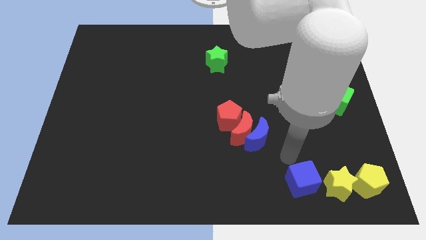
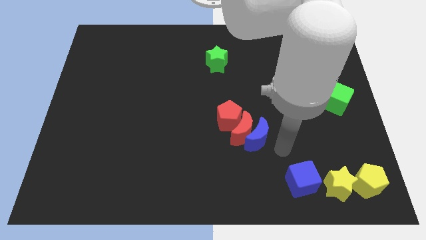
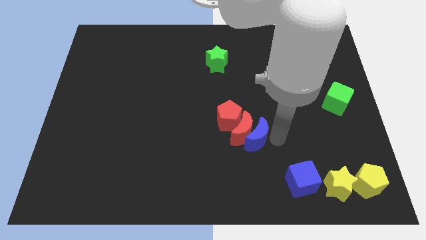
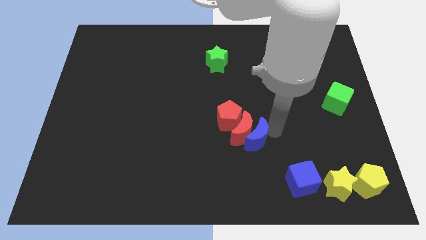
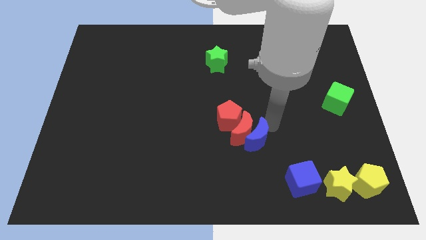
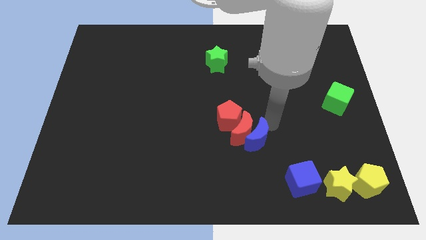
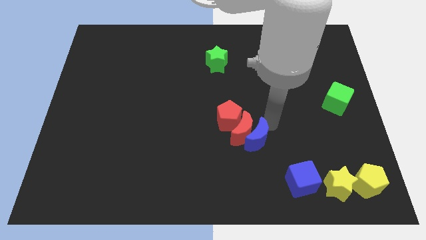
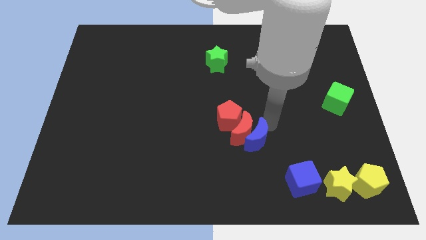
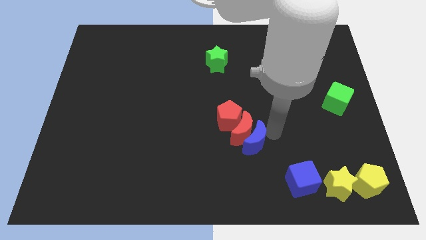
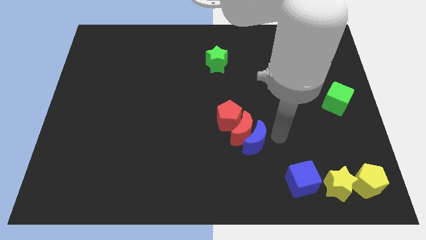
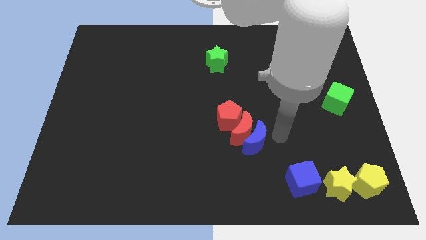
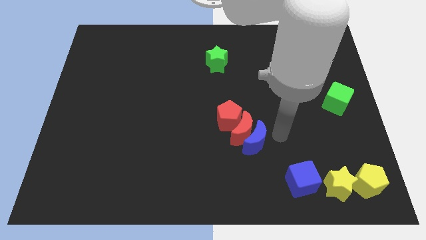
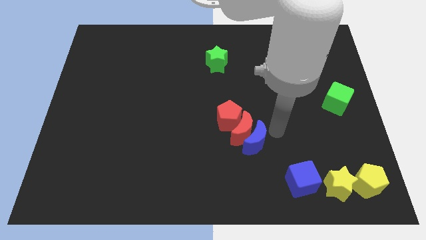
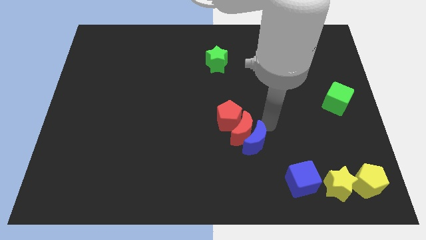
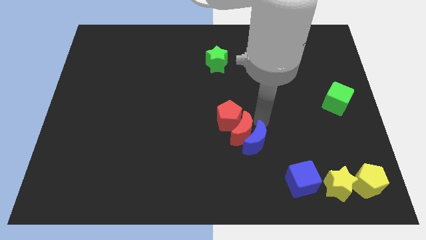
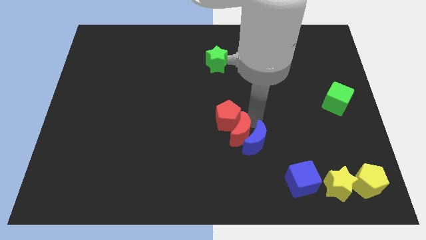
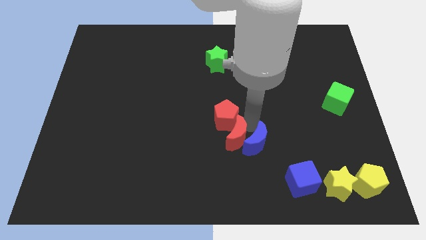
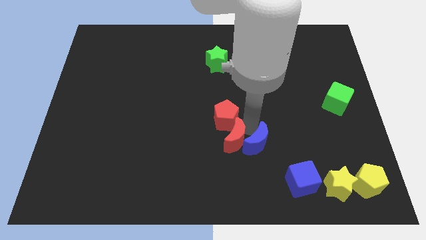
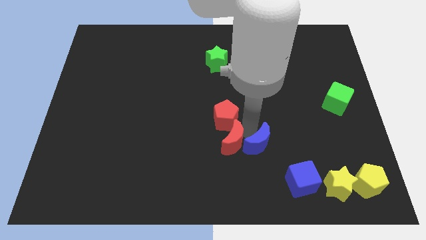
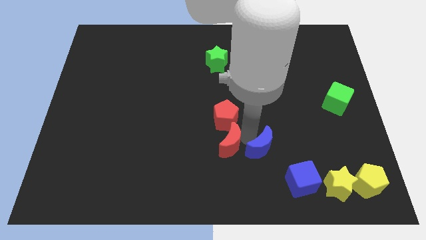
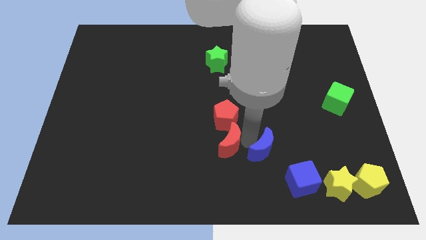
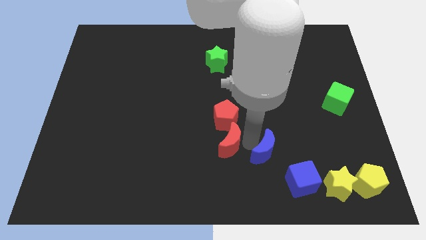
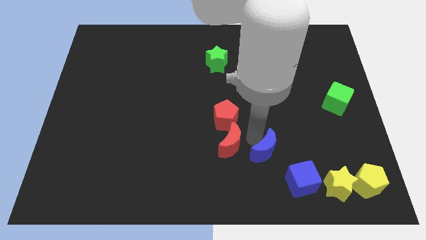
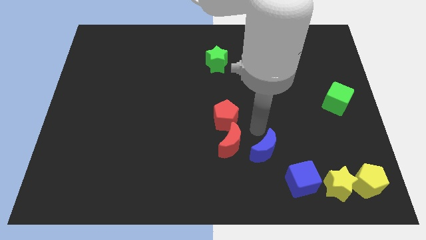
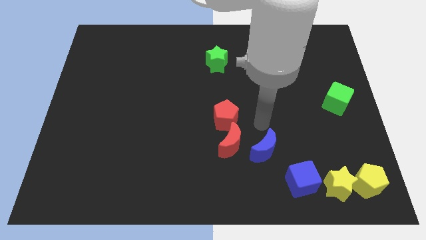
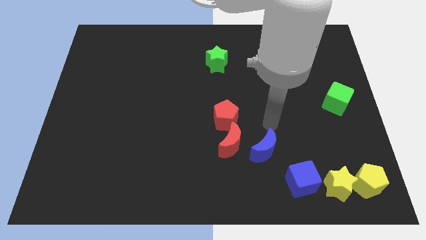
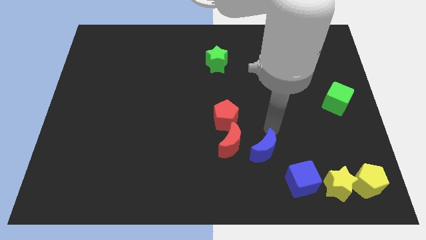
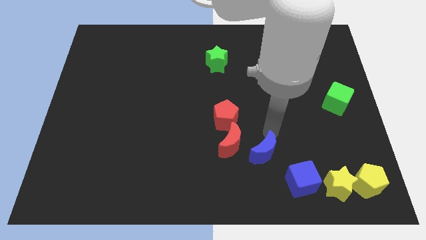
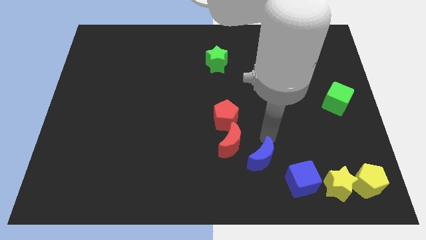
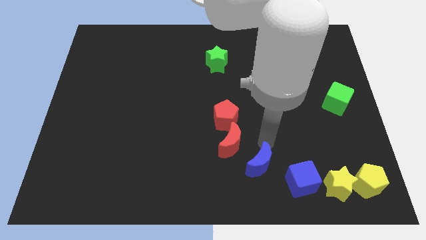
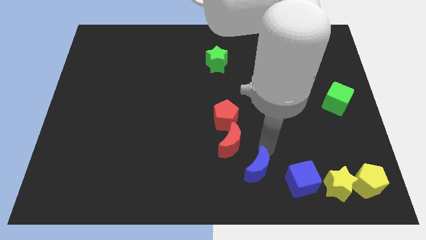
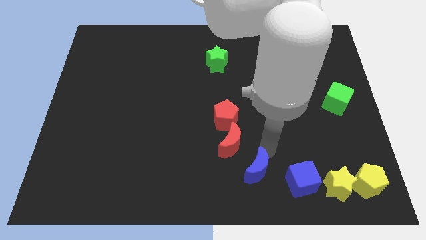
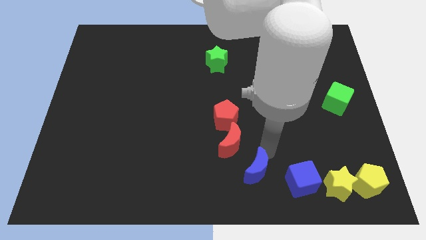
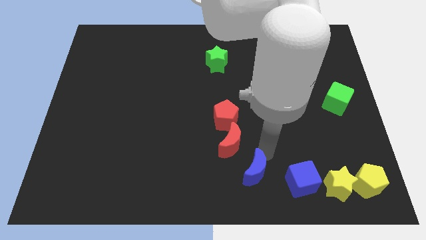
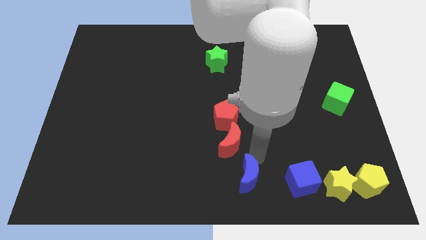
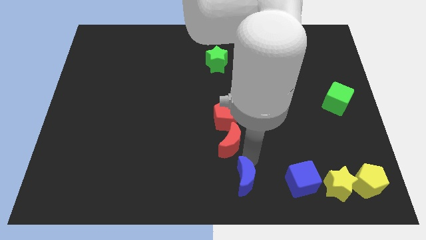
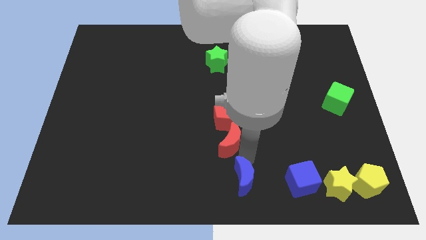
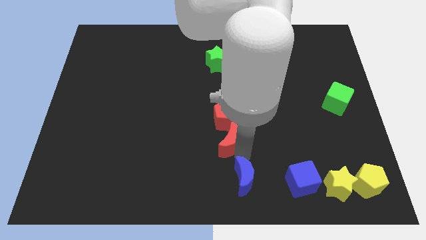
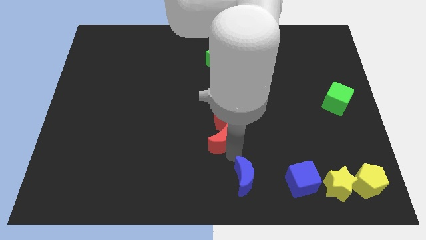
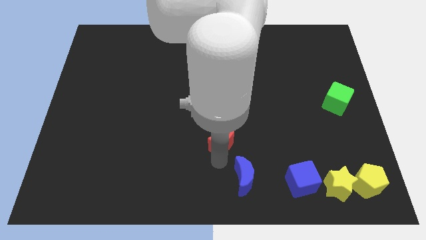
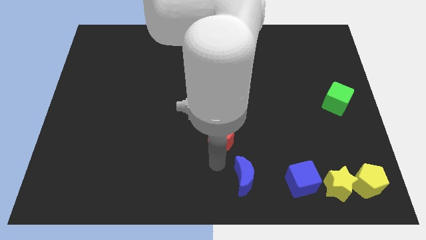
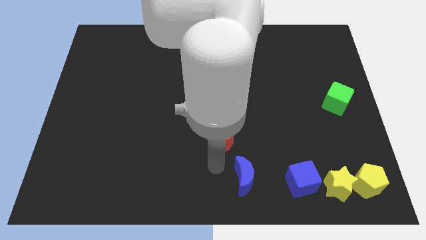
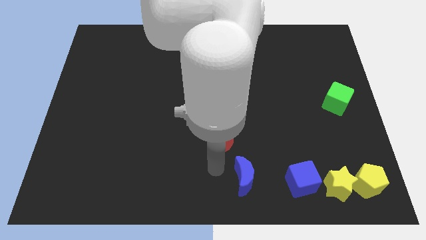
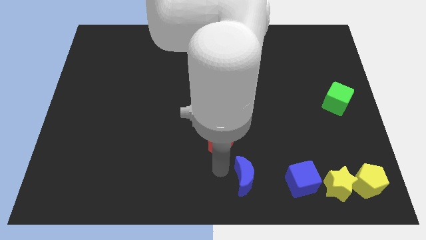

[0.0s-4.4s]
move the blue crescent to the left of the blue ccube

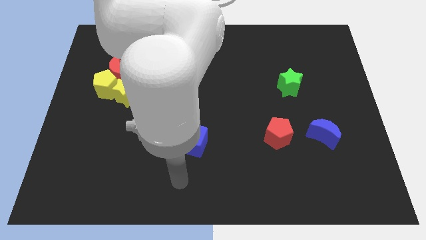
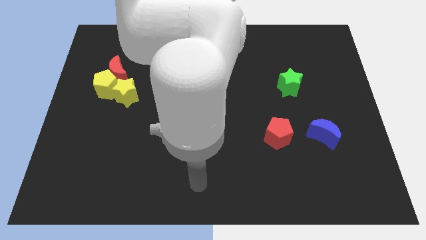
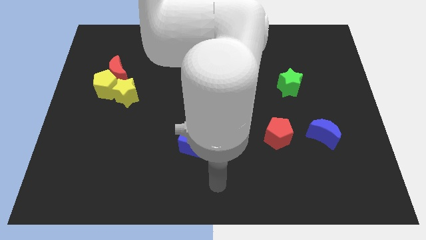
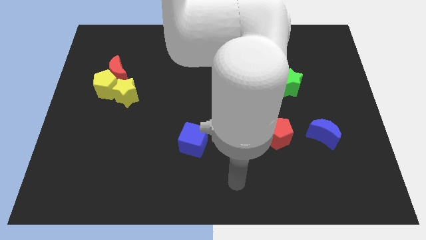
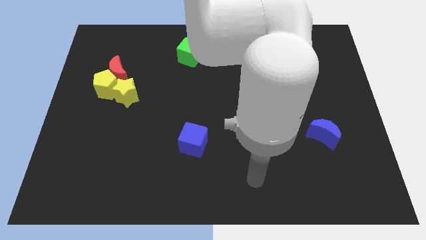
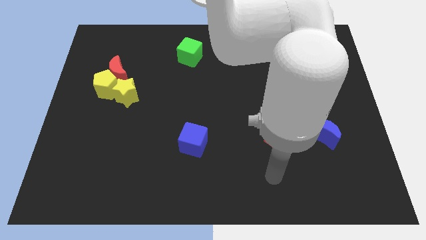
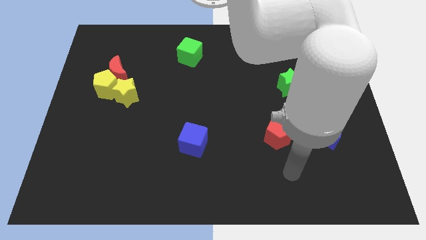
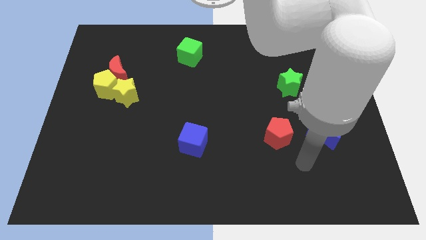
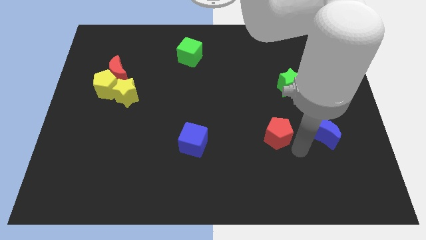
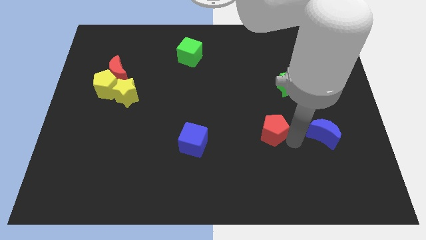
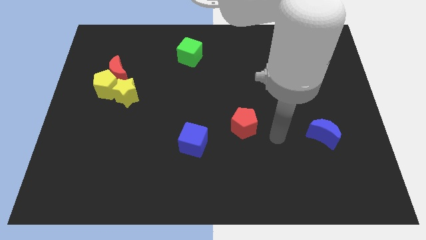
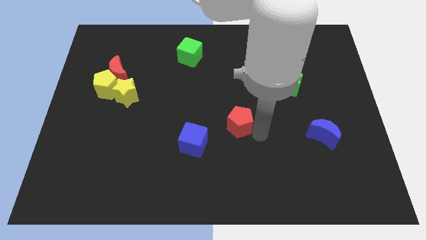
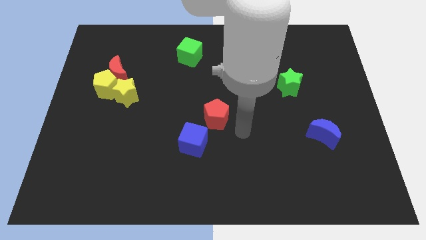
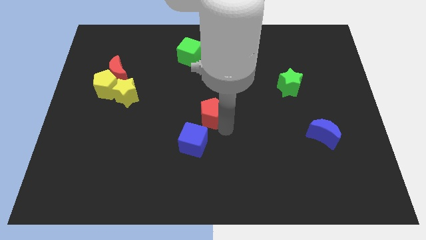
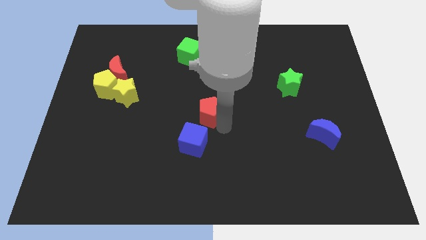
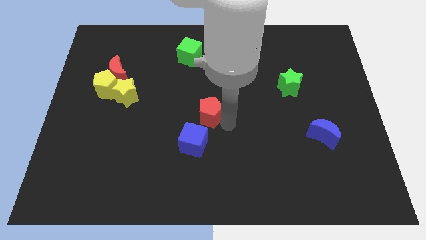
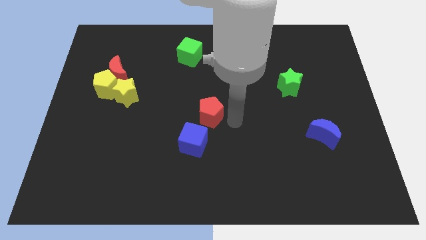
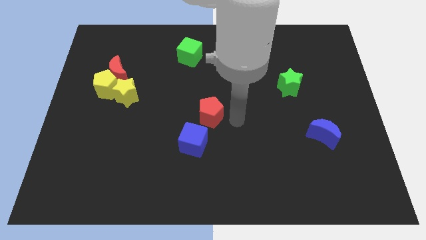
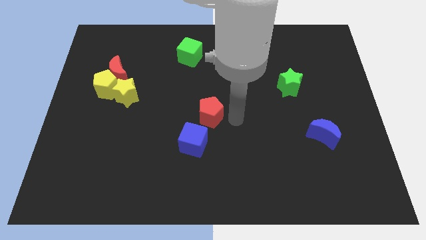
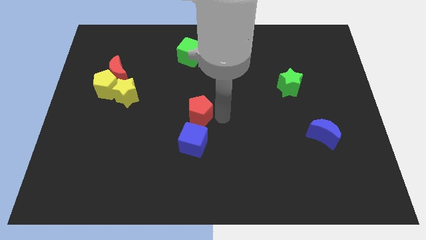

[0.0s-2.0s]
place the red pentagon on the top of the blue cube

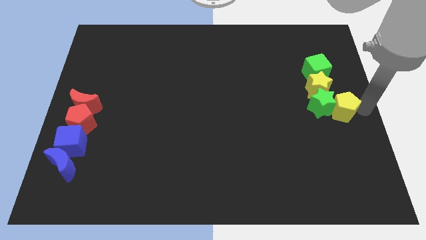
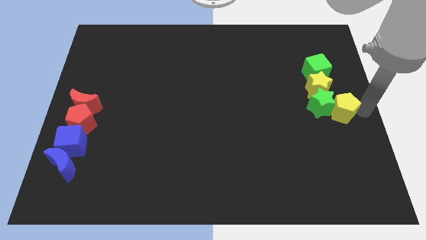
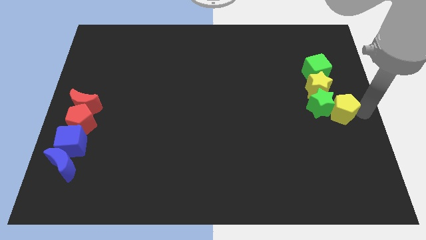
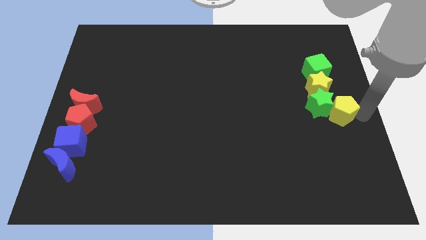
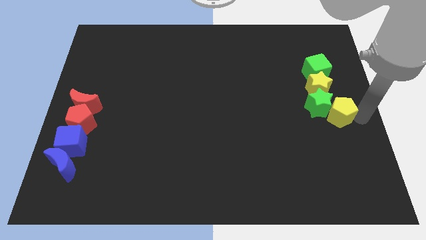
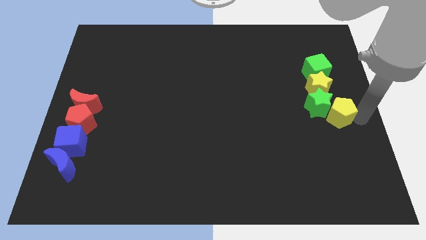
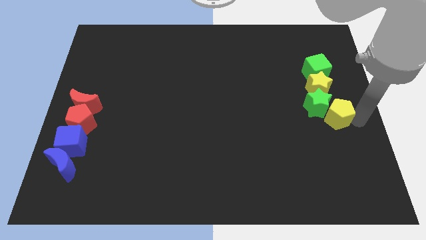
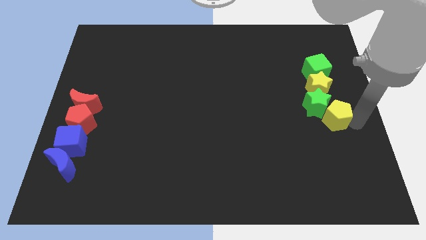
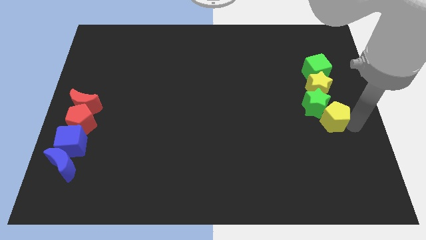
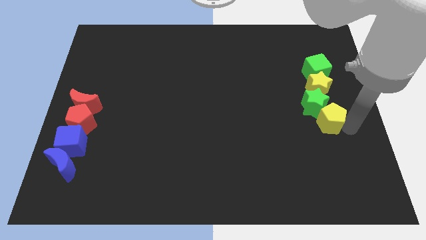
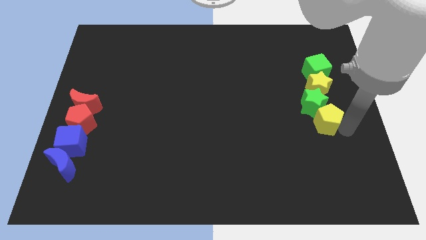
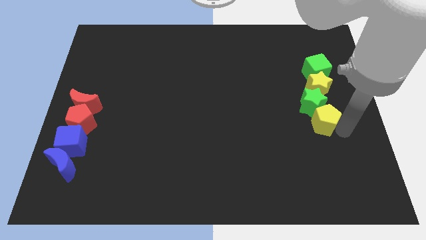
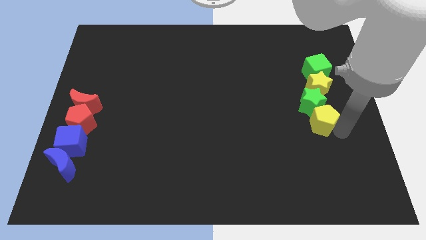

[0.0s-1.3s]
push the yellow pentagon below the green star

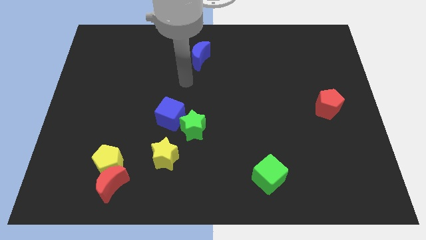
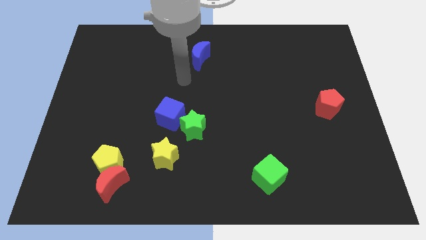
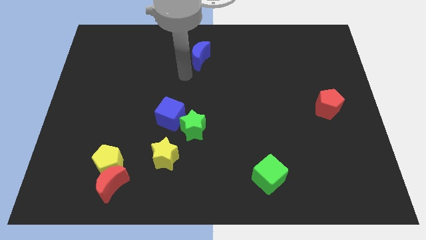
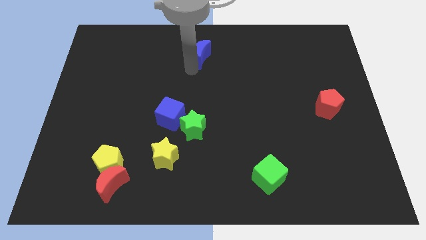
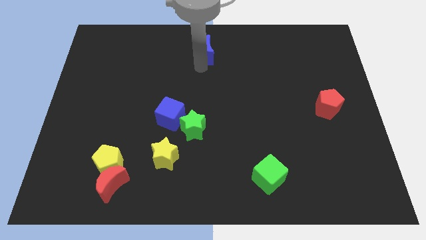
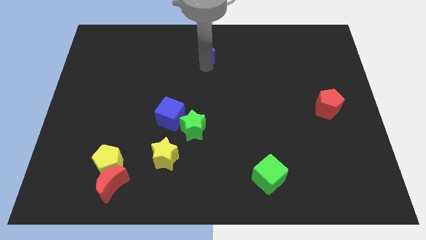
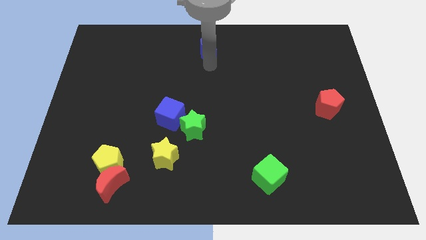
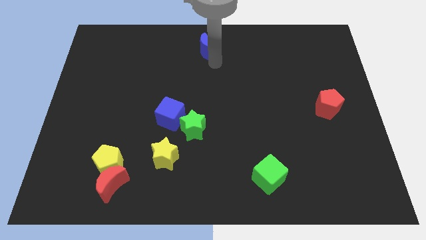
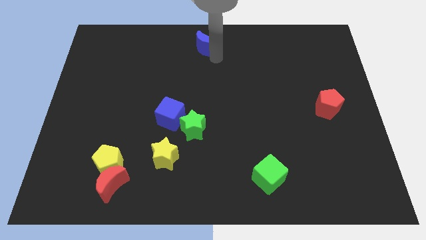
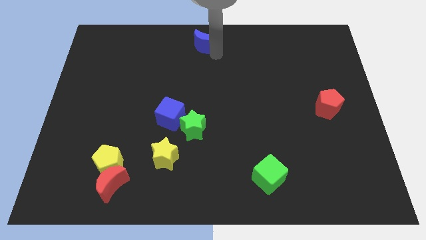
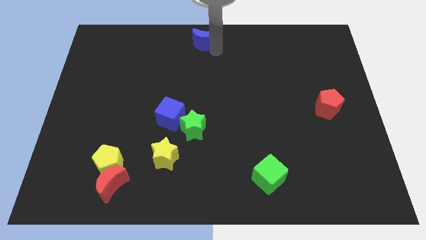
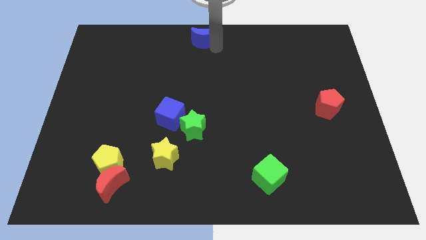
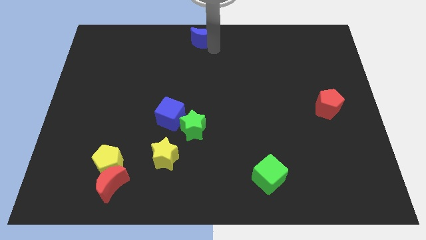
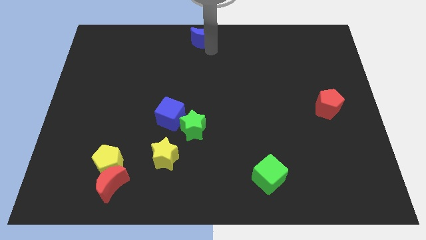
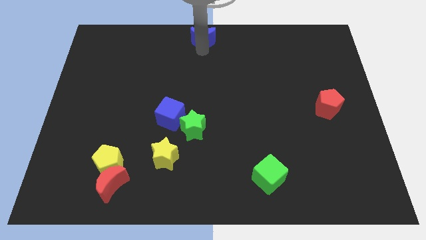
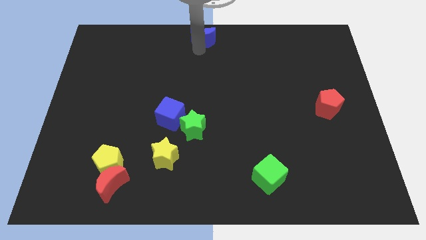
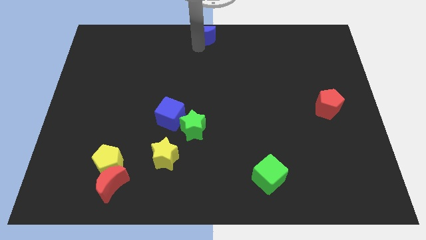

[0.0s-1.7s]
move the blue moon to the top center
